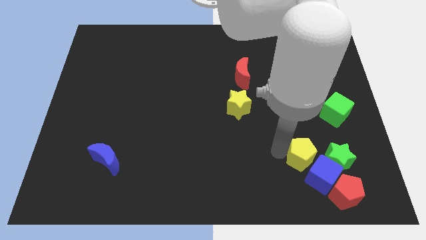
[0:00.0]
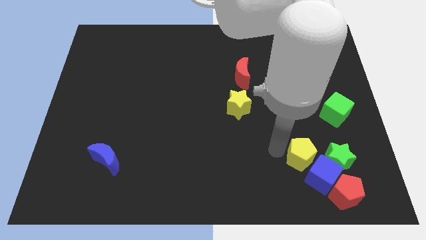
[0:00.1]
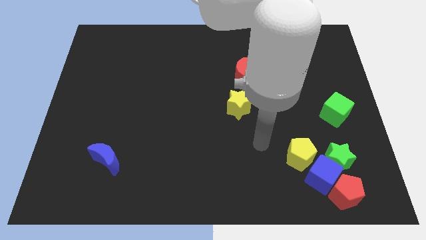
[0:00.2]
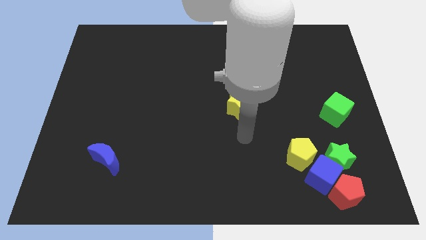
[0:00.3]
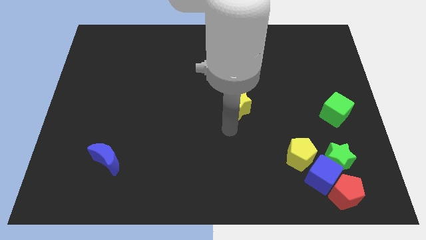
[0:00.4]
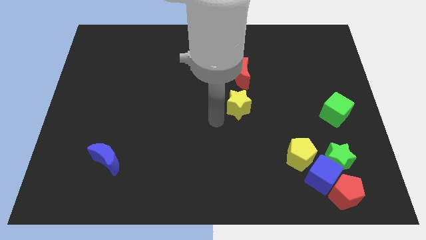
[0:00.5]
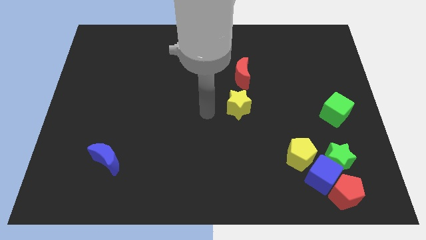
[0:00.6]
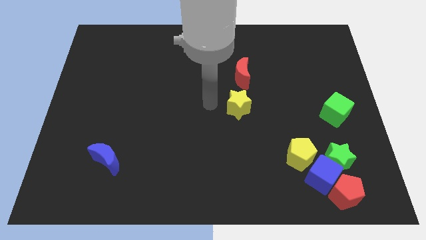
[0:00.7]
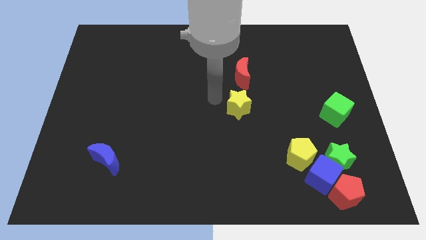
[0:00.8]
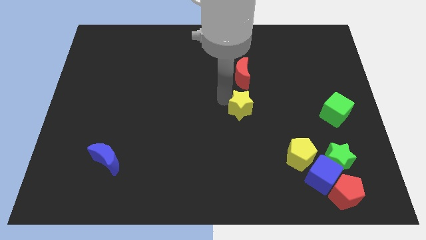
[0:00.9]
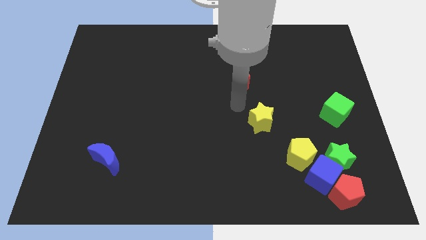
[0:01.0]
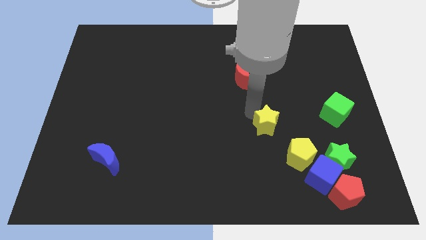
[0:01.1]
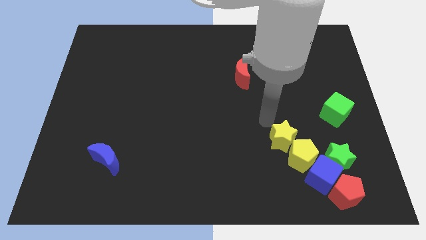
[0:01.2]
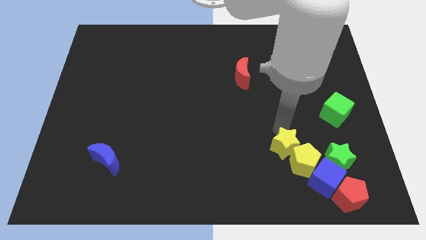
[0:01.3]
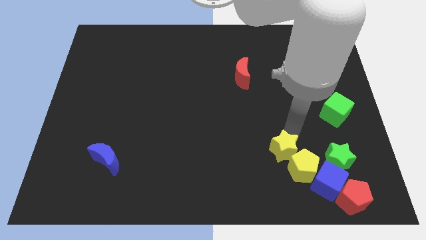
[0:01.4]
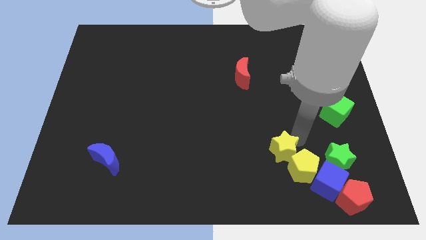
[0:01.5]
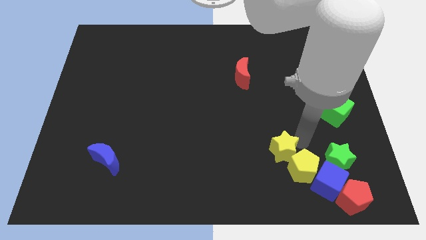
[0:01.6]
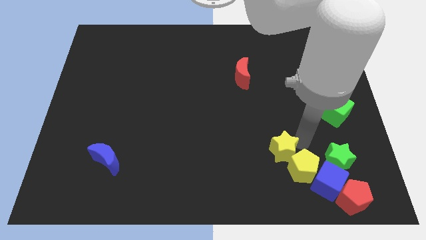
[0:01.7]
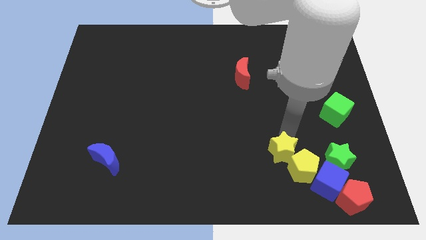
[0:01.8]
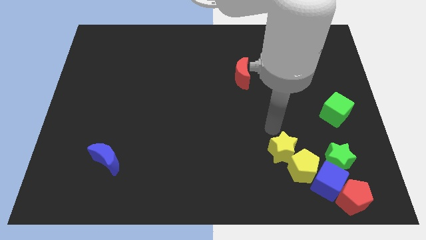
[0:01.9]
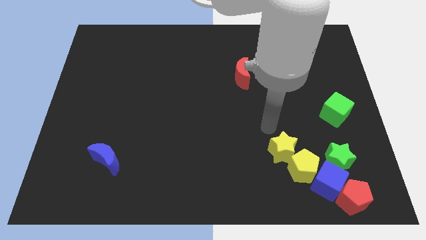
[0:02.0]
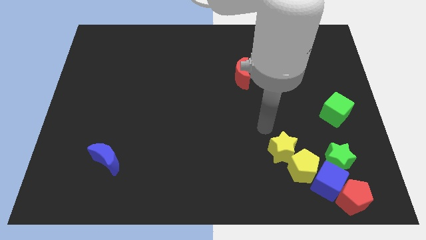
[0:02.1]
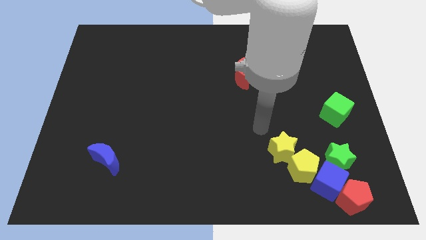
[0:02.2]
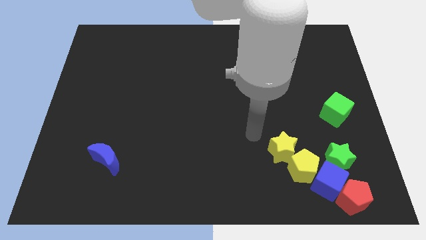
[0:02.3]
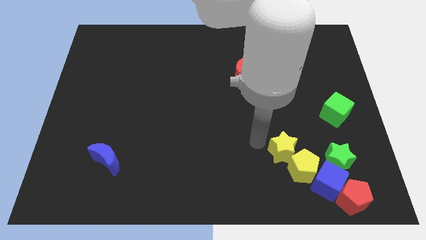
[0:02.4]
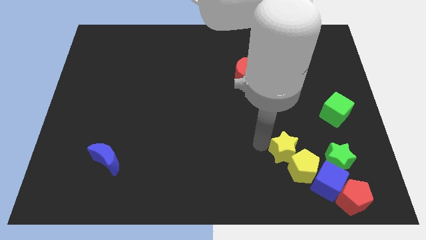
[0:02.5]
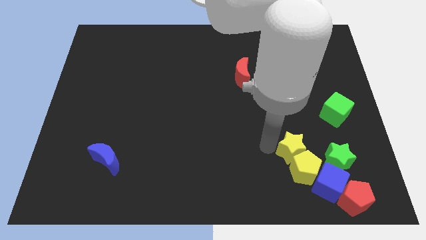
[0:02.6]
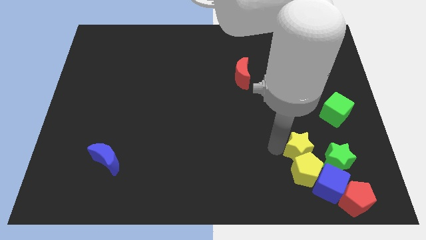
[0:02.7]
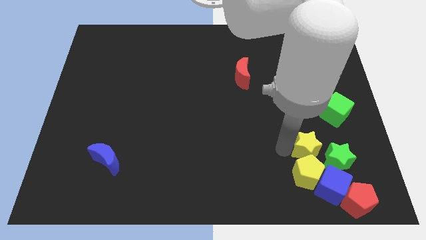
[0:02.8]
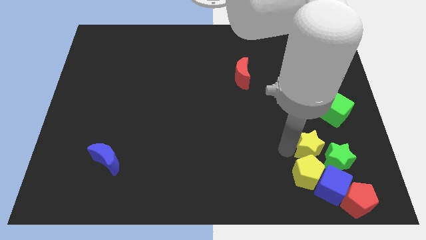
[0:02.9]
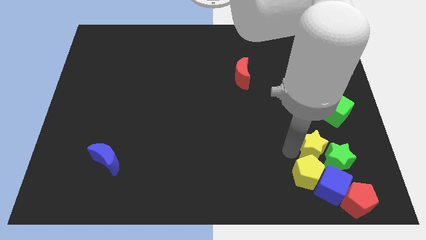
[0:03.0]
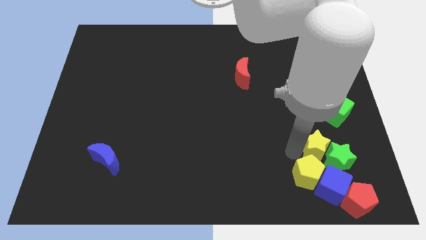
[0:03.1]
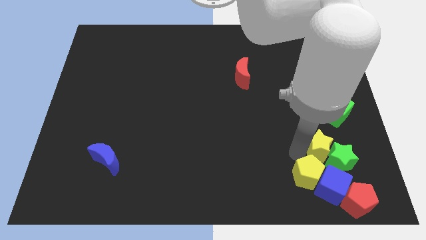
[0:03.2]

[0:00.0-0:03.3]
move yellow star into green star

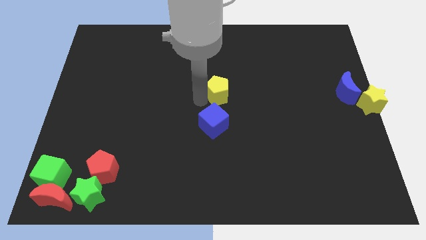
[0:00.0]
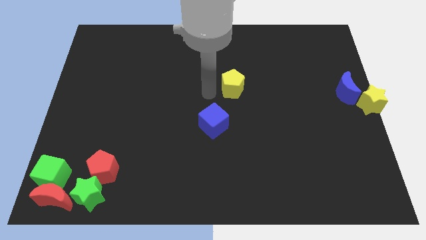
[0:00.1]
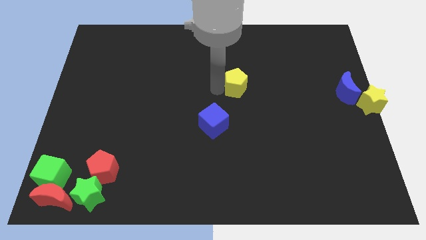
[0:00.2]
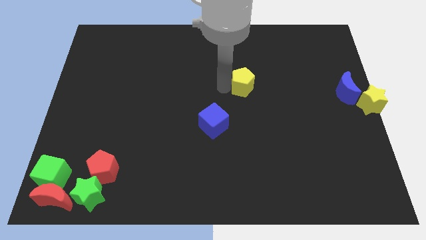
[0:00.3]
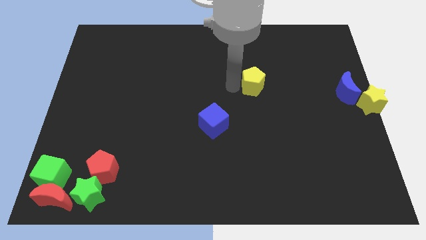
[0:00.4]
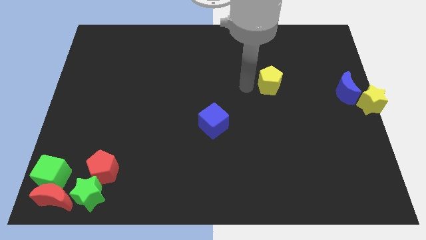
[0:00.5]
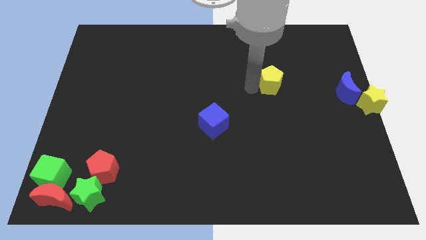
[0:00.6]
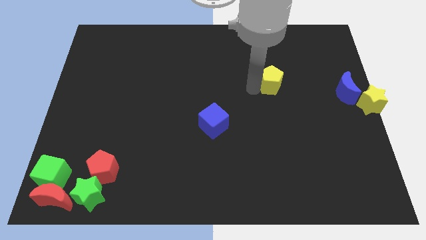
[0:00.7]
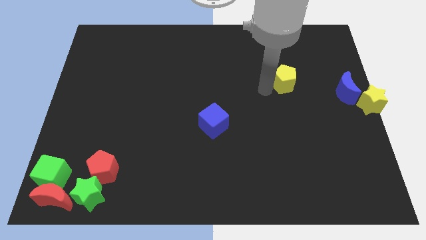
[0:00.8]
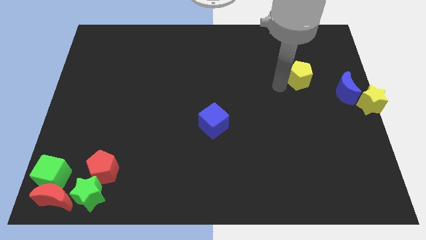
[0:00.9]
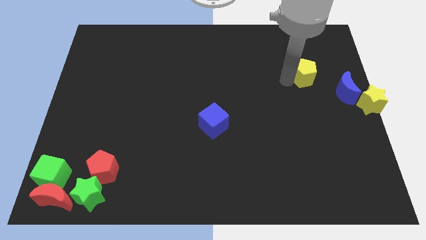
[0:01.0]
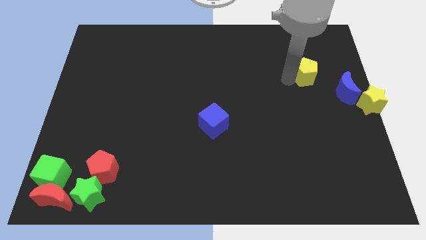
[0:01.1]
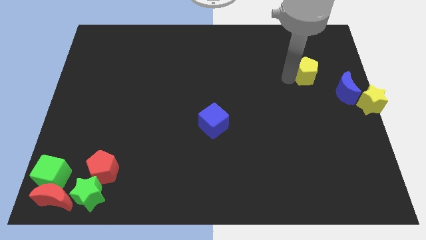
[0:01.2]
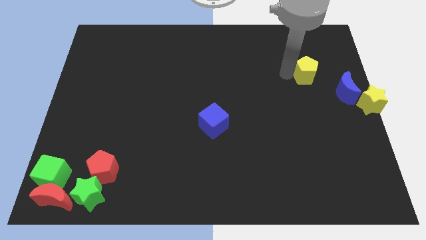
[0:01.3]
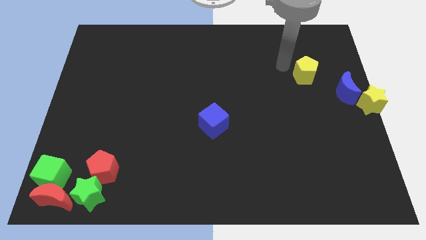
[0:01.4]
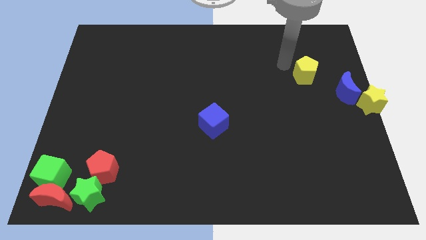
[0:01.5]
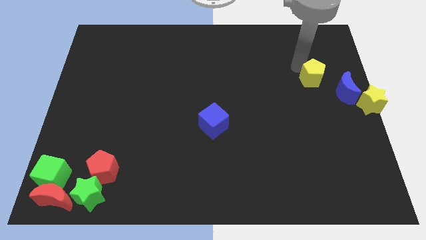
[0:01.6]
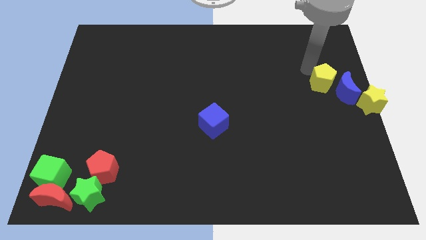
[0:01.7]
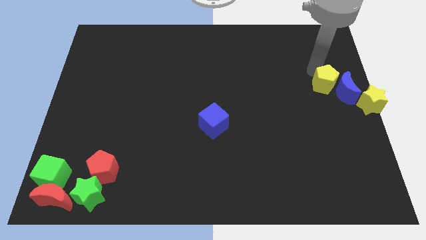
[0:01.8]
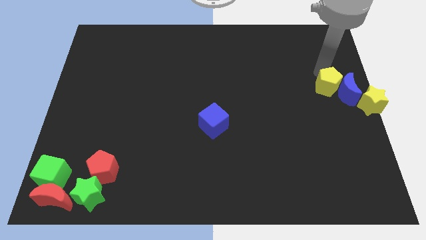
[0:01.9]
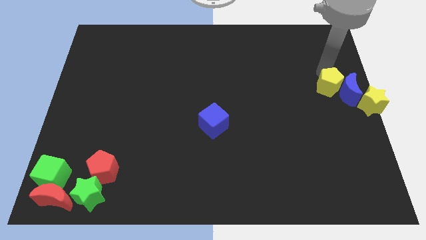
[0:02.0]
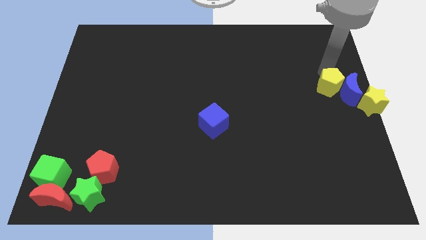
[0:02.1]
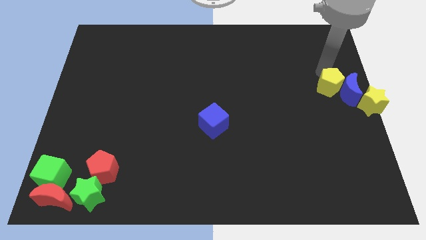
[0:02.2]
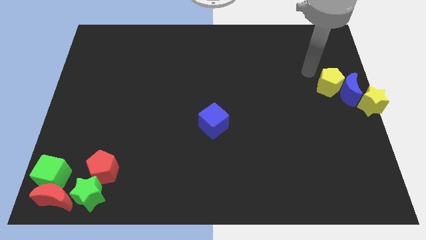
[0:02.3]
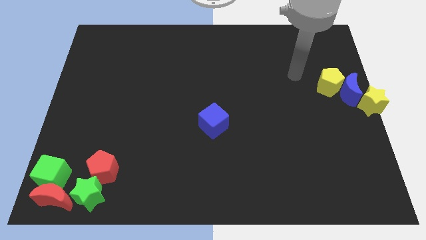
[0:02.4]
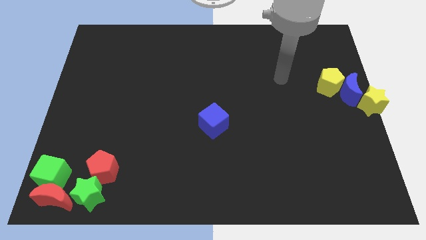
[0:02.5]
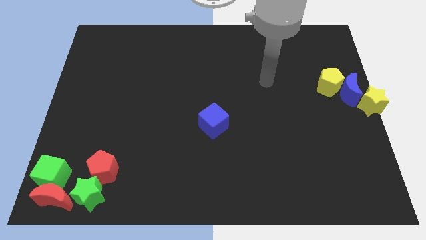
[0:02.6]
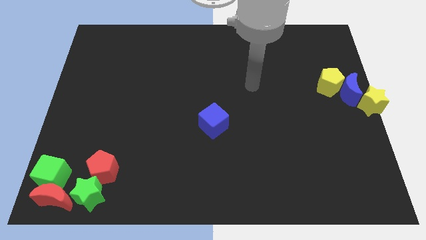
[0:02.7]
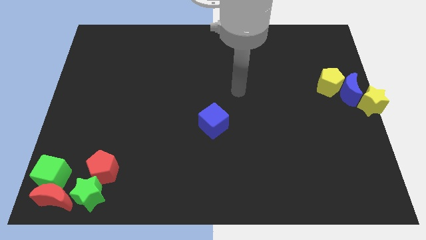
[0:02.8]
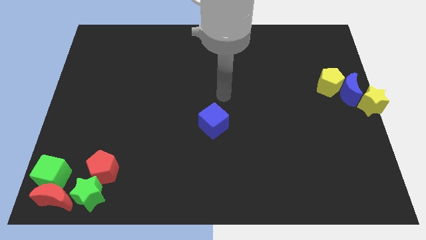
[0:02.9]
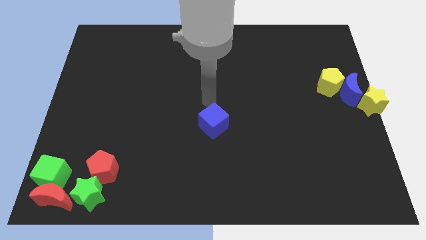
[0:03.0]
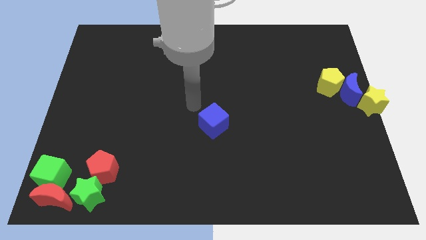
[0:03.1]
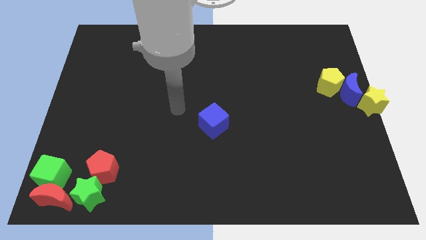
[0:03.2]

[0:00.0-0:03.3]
push the yellow pentagon into the blue moon

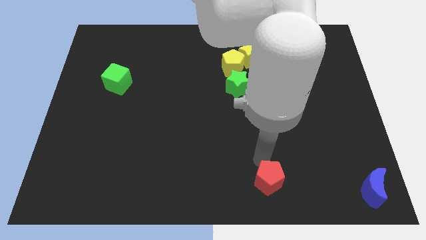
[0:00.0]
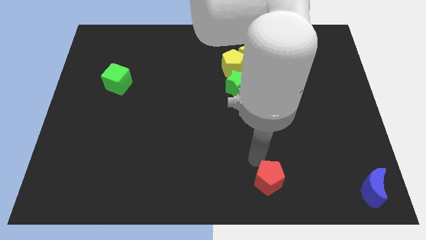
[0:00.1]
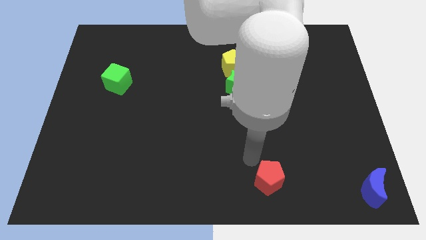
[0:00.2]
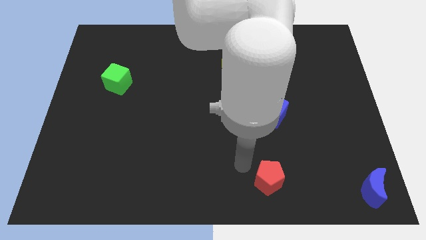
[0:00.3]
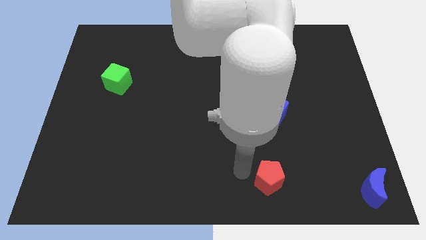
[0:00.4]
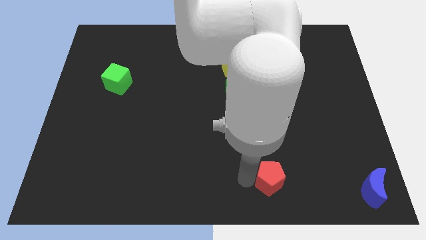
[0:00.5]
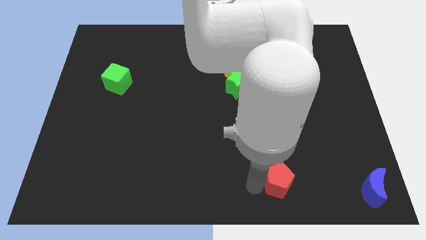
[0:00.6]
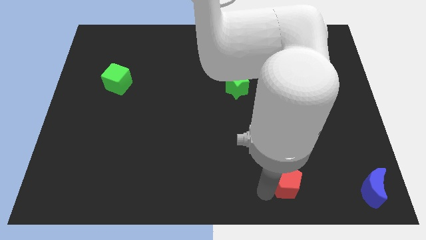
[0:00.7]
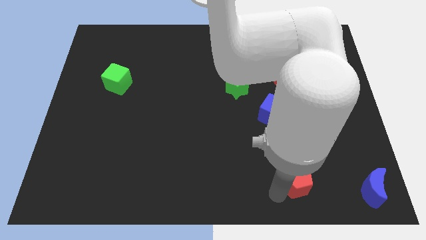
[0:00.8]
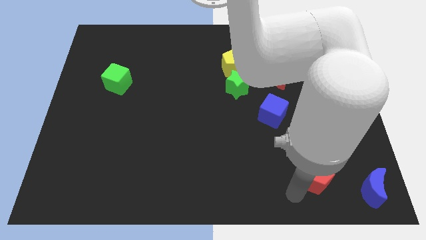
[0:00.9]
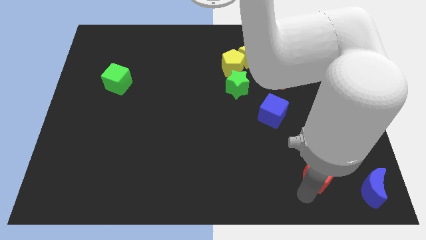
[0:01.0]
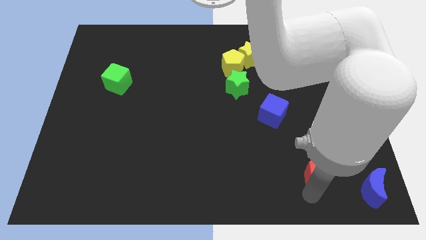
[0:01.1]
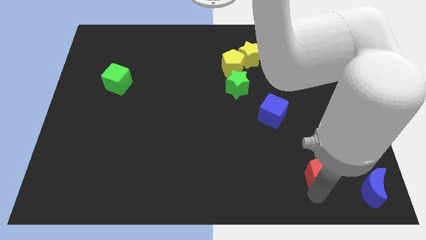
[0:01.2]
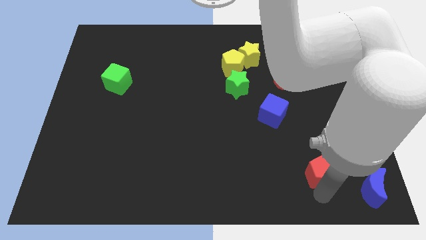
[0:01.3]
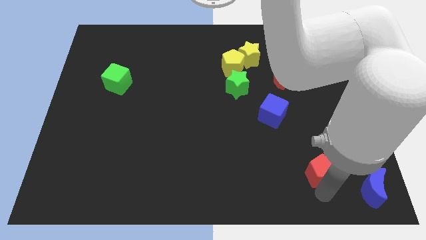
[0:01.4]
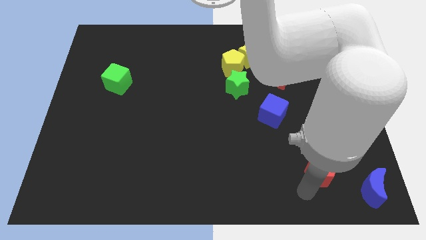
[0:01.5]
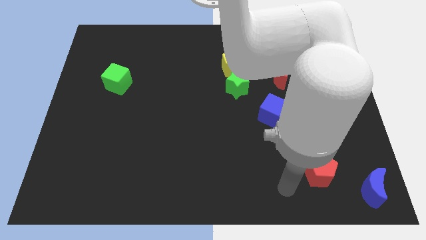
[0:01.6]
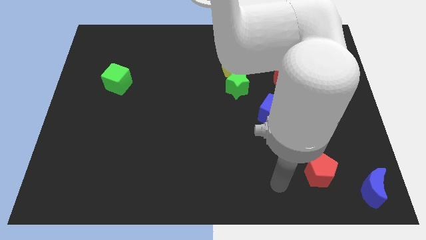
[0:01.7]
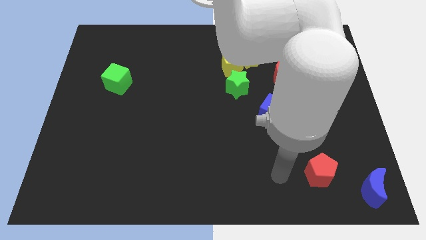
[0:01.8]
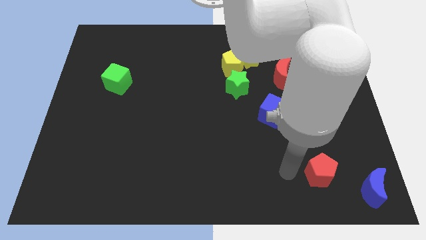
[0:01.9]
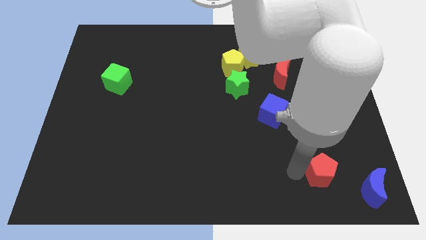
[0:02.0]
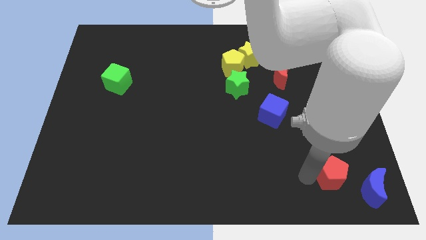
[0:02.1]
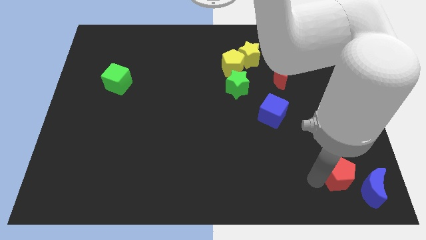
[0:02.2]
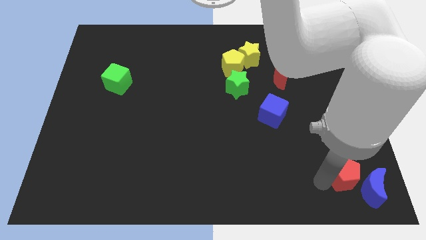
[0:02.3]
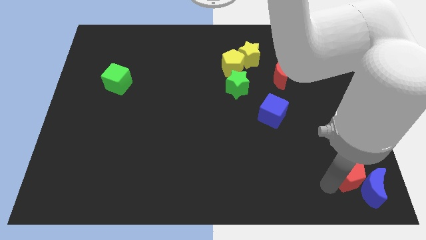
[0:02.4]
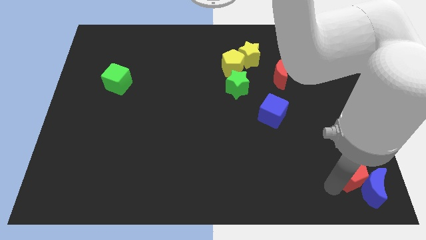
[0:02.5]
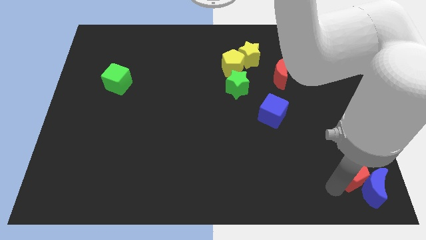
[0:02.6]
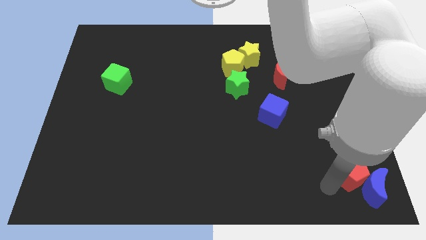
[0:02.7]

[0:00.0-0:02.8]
place red pentagon near blue crescent
